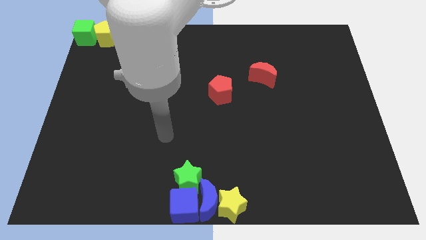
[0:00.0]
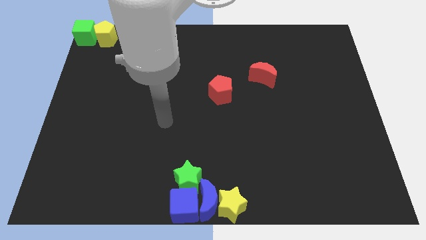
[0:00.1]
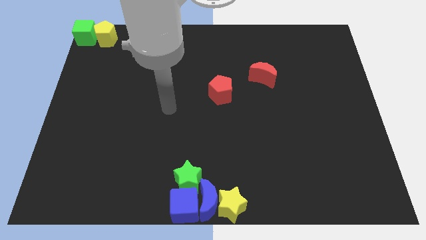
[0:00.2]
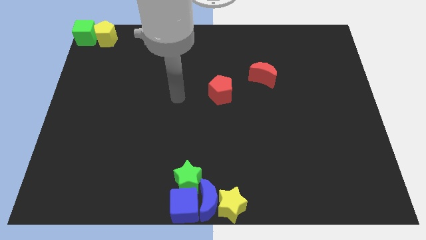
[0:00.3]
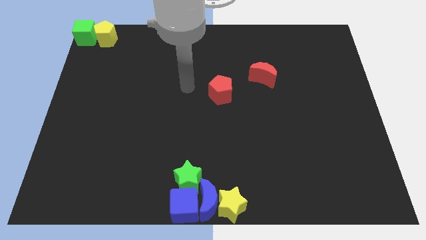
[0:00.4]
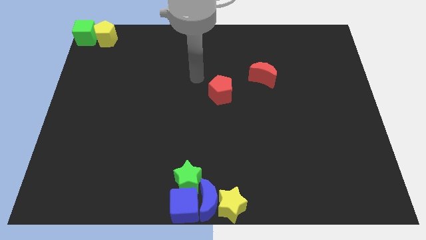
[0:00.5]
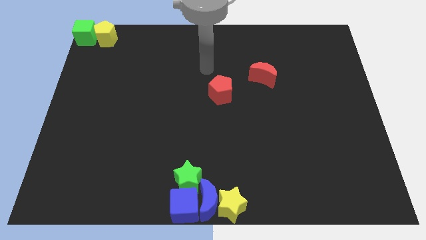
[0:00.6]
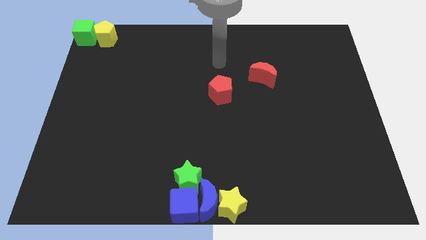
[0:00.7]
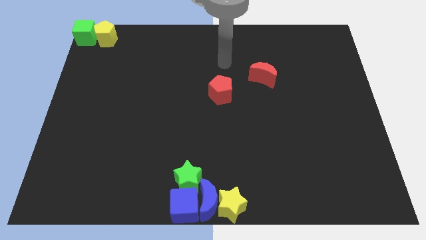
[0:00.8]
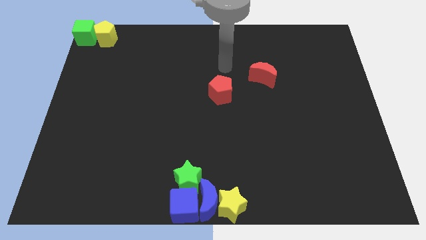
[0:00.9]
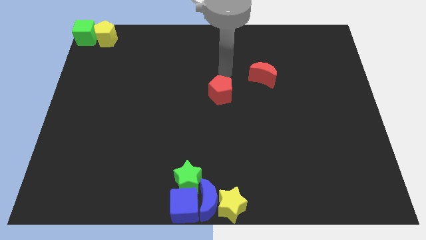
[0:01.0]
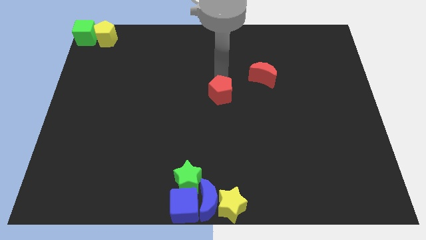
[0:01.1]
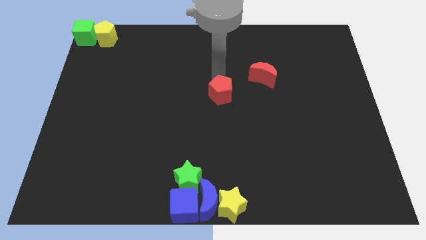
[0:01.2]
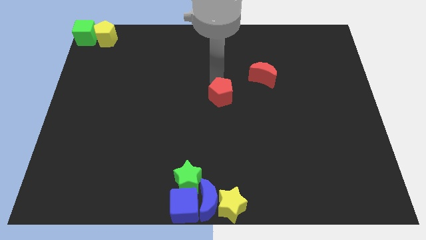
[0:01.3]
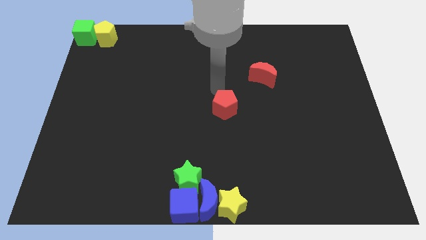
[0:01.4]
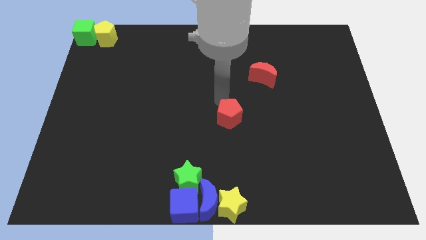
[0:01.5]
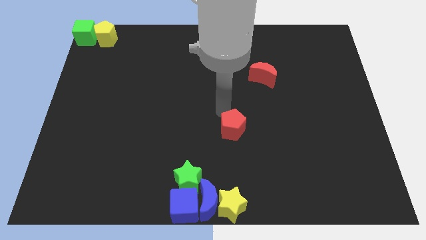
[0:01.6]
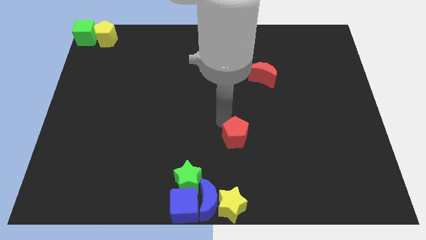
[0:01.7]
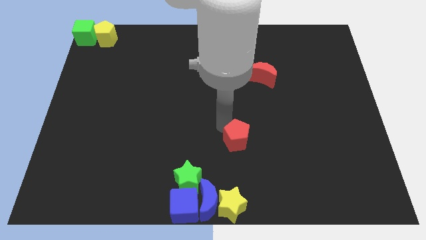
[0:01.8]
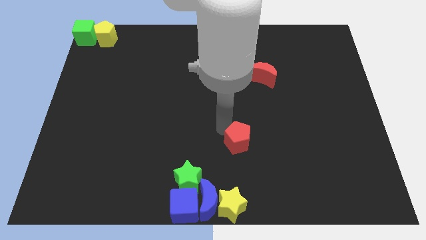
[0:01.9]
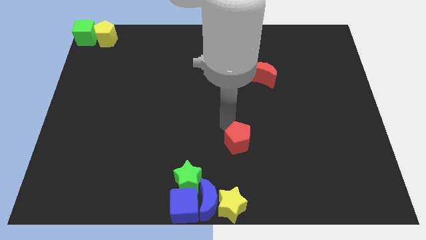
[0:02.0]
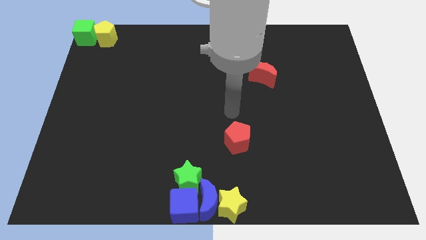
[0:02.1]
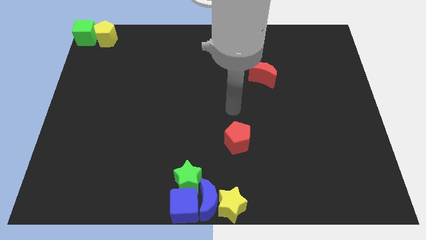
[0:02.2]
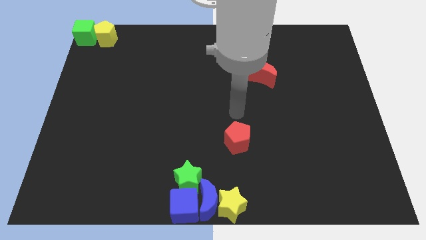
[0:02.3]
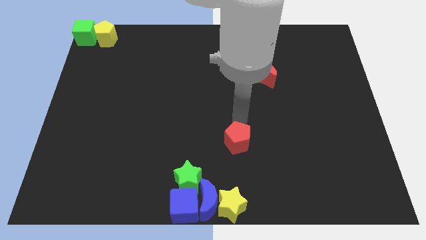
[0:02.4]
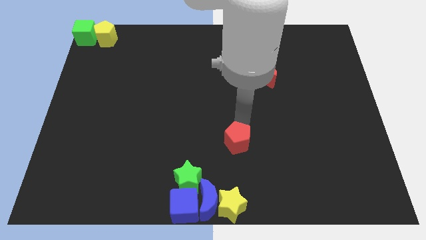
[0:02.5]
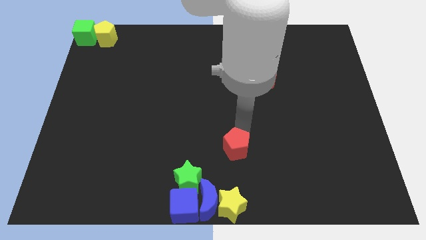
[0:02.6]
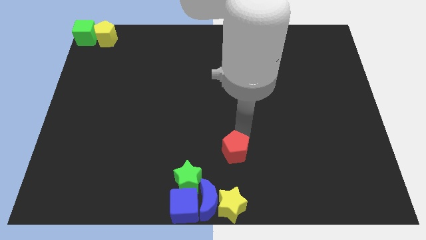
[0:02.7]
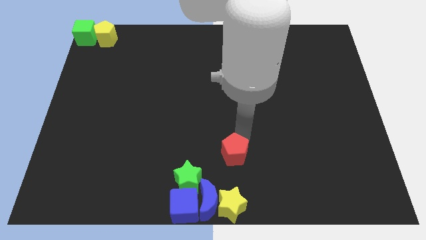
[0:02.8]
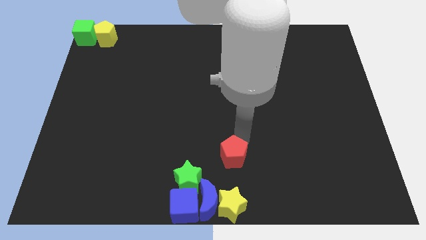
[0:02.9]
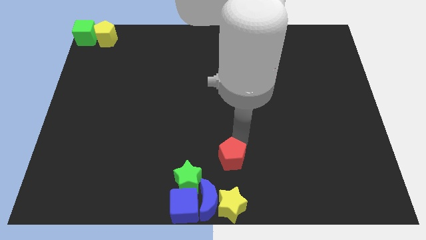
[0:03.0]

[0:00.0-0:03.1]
move the red pentagon above the yellow star

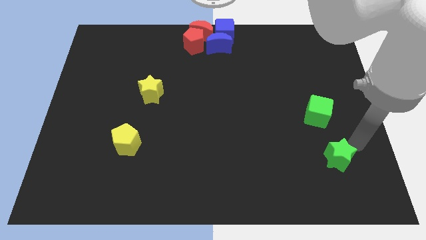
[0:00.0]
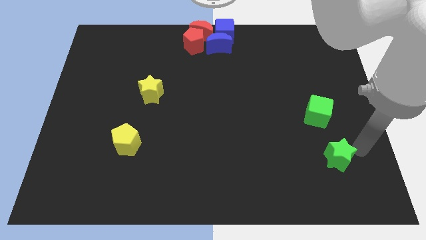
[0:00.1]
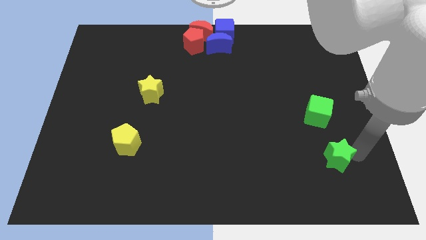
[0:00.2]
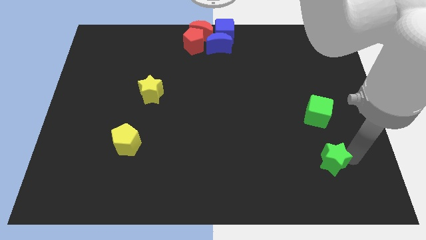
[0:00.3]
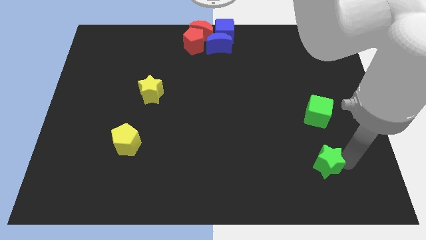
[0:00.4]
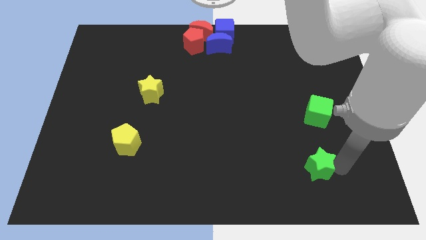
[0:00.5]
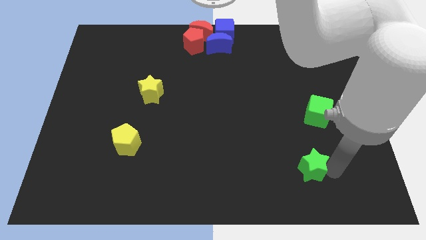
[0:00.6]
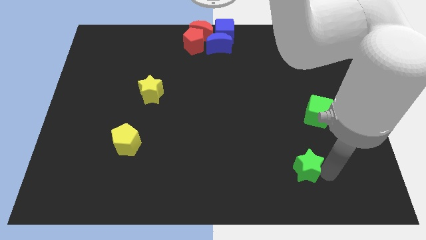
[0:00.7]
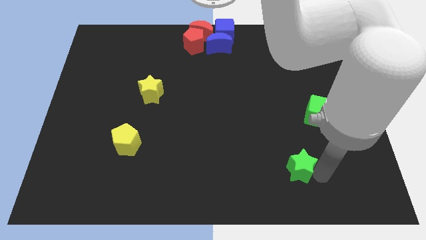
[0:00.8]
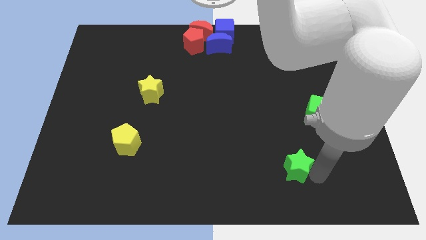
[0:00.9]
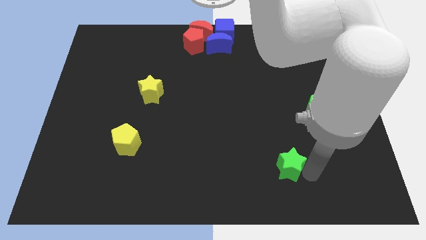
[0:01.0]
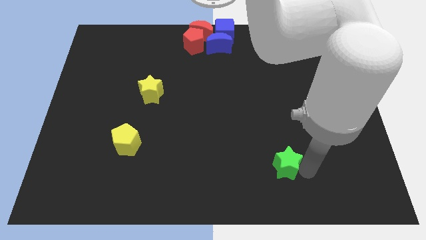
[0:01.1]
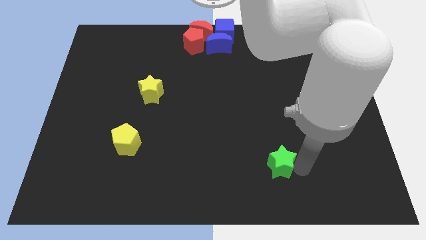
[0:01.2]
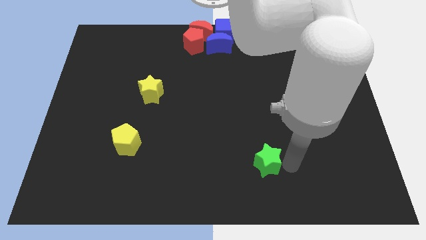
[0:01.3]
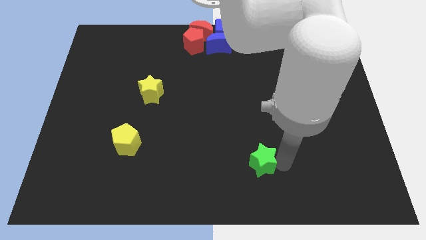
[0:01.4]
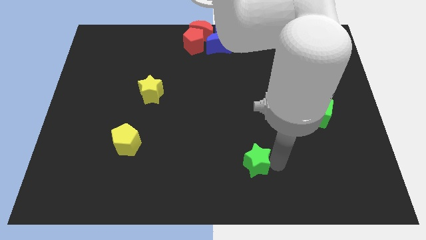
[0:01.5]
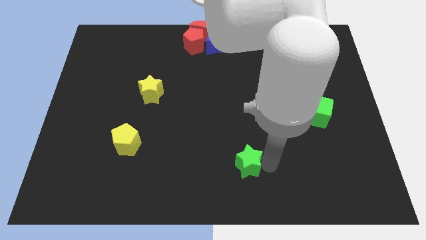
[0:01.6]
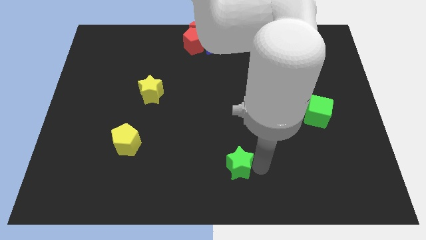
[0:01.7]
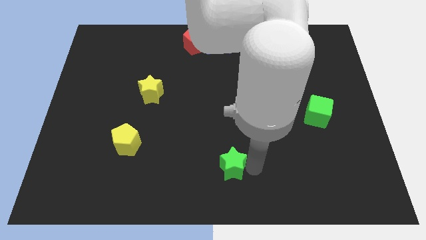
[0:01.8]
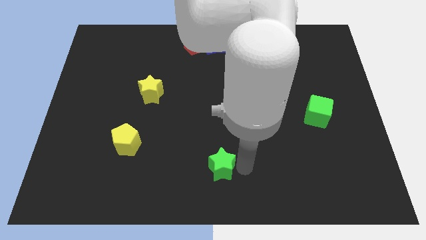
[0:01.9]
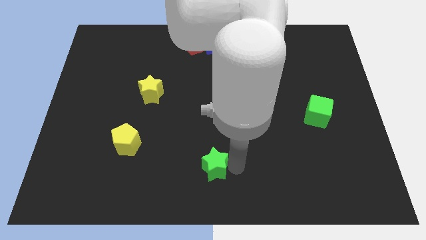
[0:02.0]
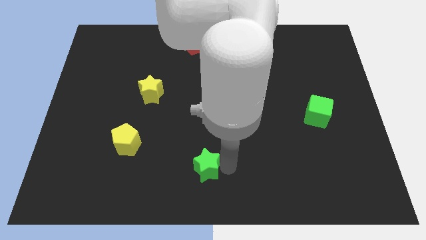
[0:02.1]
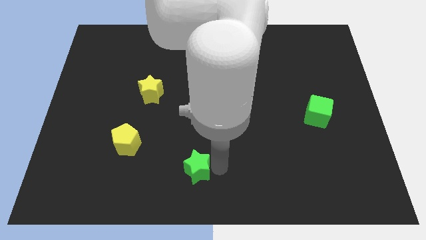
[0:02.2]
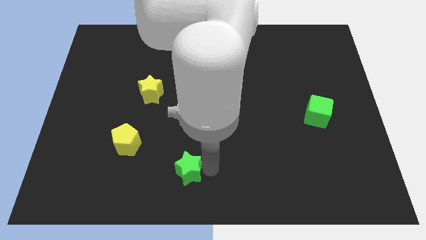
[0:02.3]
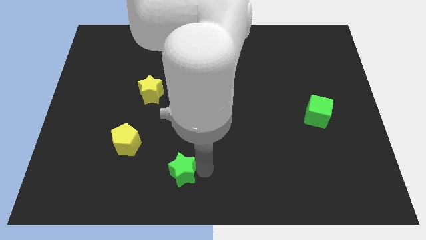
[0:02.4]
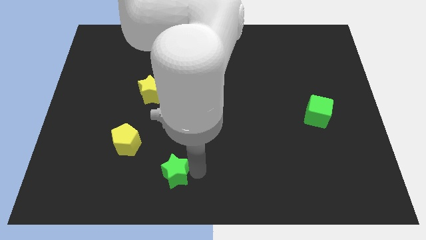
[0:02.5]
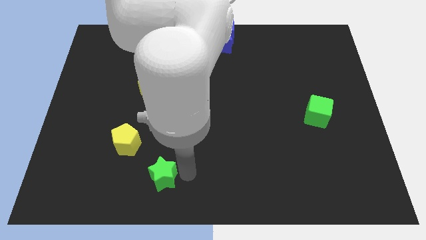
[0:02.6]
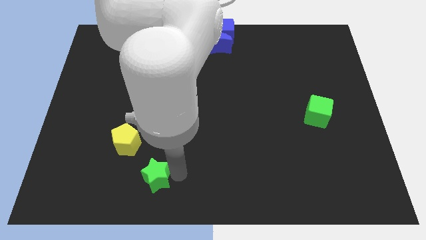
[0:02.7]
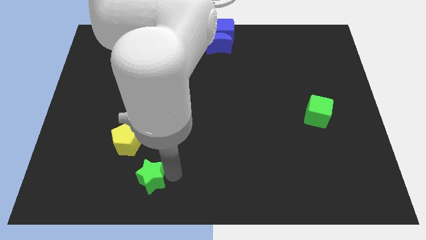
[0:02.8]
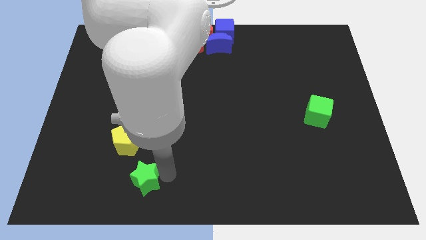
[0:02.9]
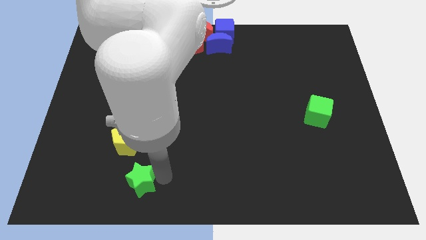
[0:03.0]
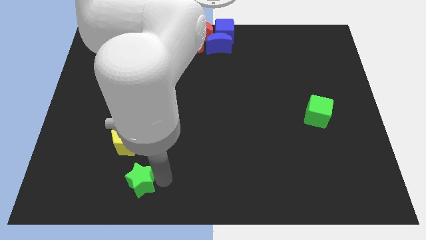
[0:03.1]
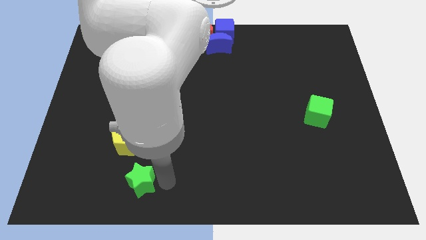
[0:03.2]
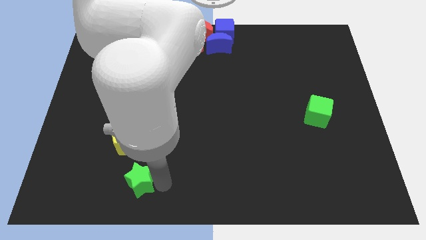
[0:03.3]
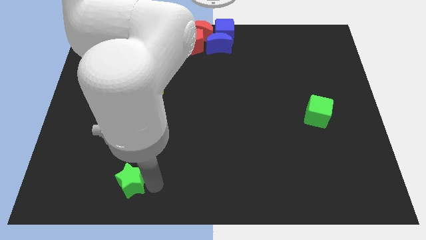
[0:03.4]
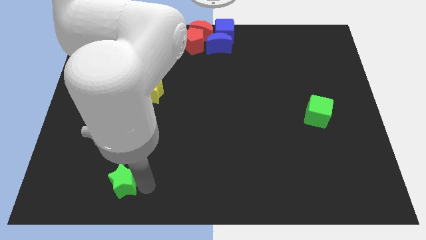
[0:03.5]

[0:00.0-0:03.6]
place the green star under the yellow pentagon

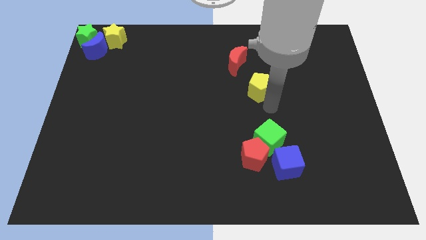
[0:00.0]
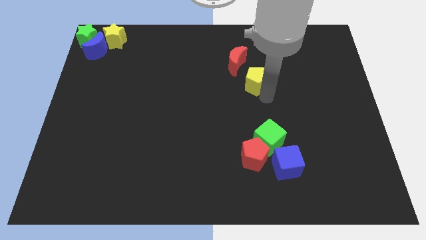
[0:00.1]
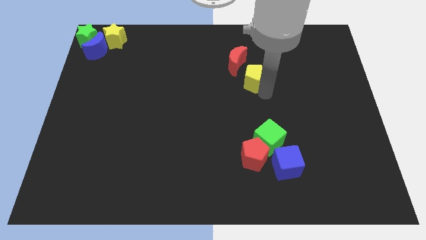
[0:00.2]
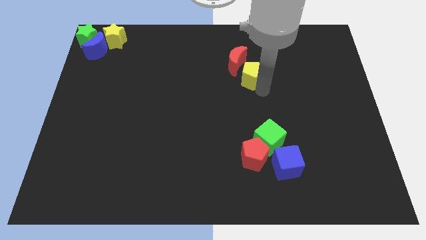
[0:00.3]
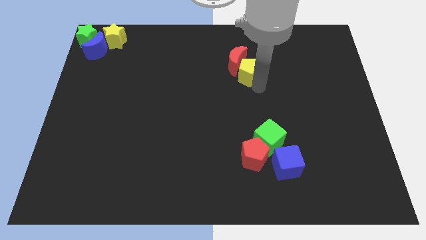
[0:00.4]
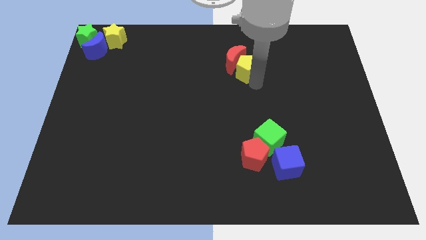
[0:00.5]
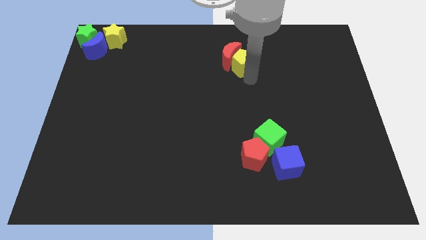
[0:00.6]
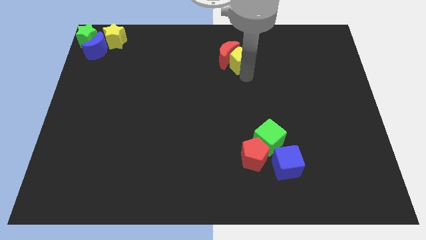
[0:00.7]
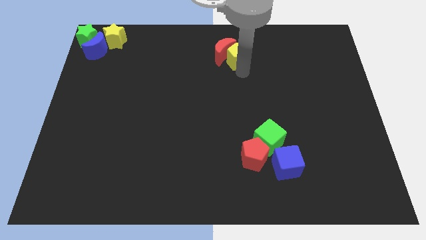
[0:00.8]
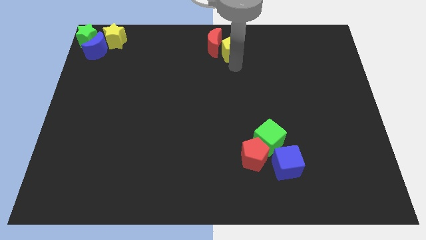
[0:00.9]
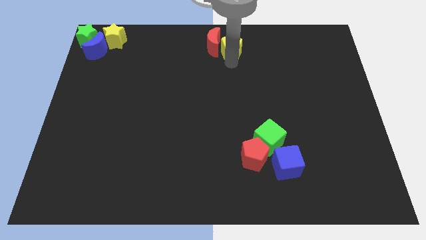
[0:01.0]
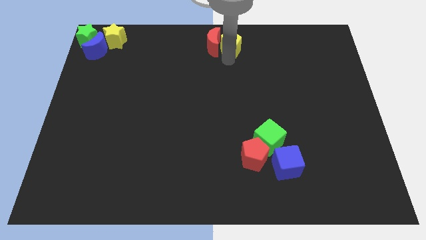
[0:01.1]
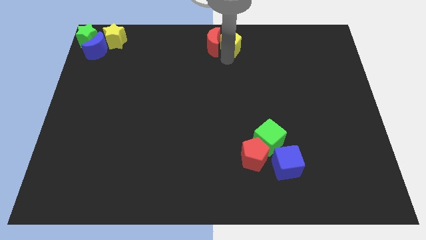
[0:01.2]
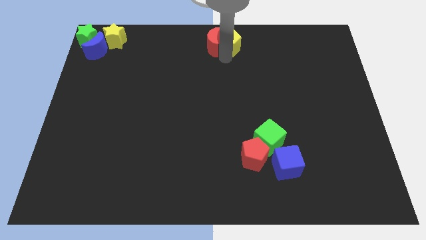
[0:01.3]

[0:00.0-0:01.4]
push yellow pentagon into red crescent

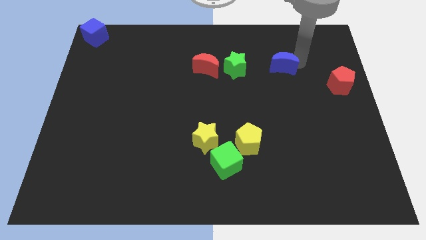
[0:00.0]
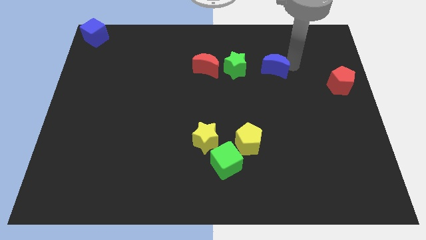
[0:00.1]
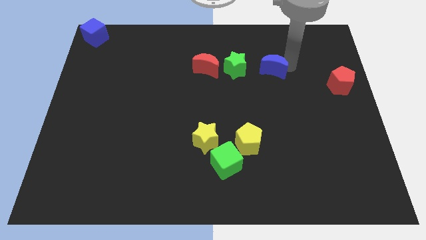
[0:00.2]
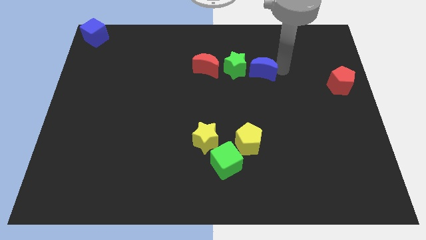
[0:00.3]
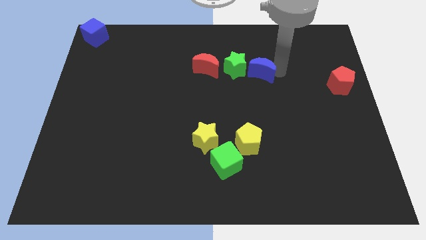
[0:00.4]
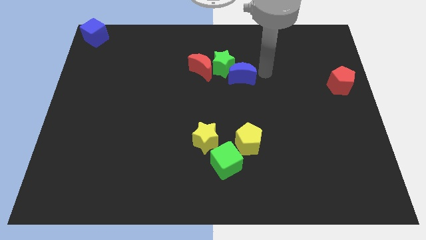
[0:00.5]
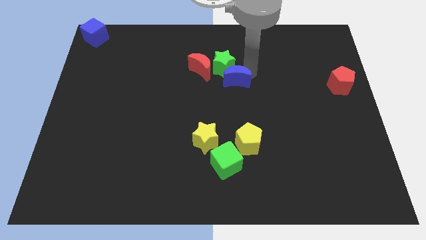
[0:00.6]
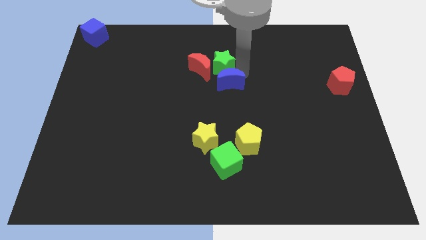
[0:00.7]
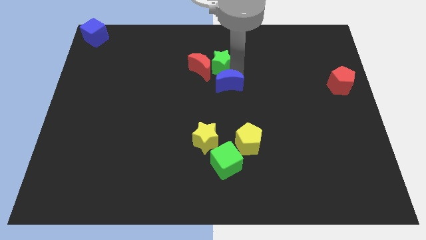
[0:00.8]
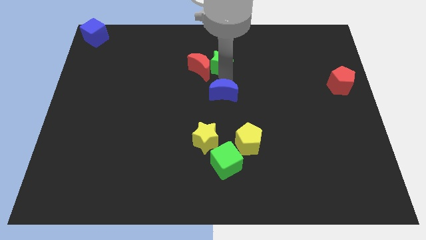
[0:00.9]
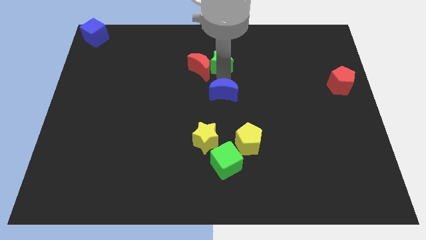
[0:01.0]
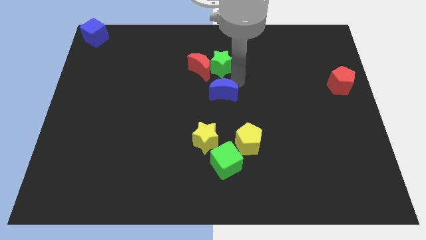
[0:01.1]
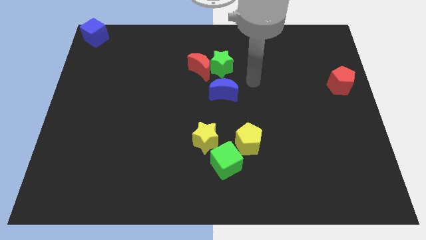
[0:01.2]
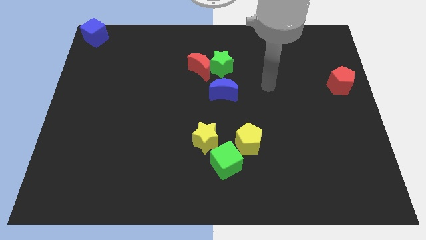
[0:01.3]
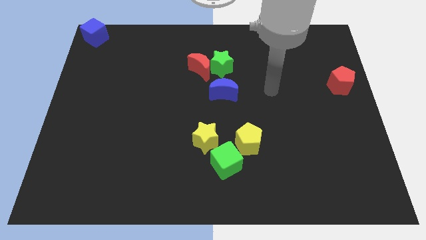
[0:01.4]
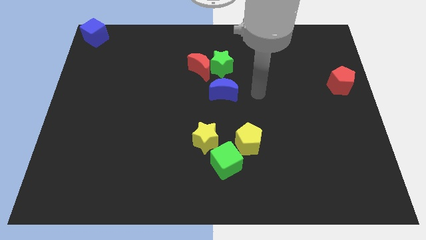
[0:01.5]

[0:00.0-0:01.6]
push the blue crescent to the bottom of the green star
